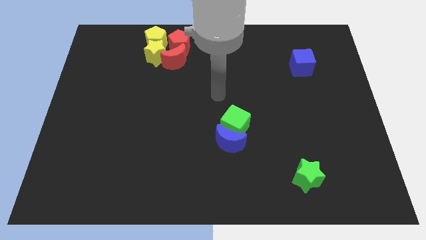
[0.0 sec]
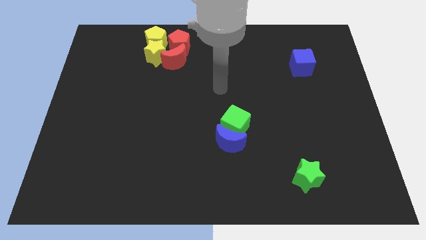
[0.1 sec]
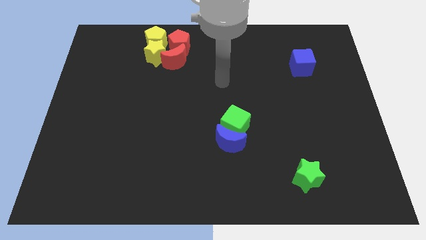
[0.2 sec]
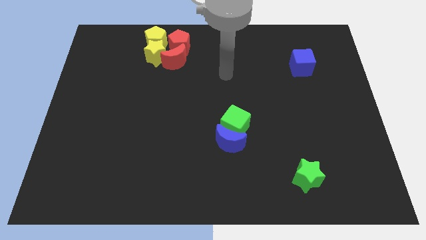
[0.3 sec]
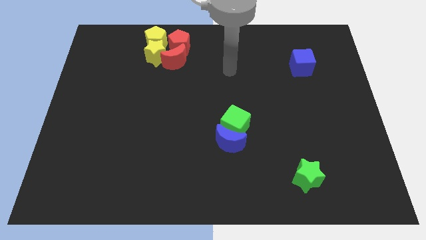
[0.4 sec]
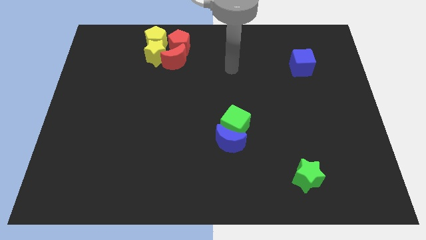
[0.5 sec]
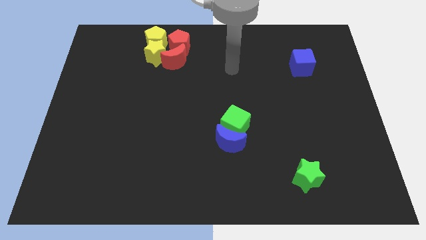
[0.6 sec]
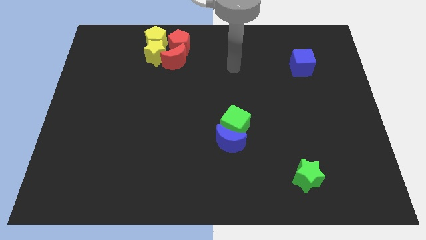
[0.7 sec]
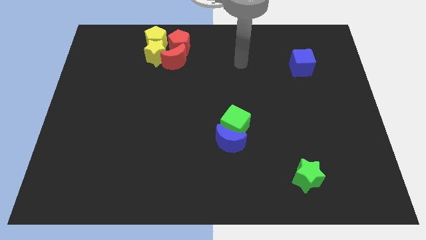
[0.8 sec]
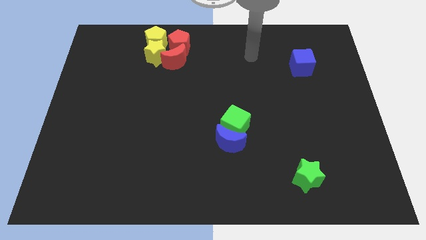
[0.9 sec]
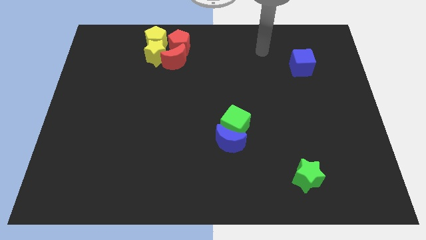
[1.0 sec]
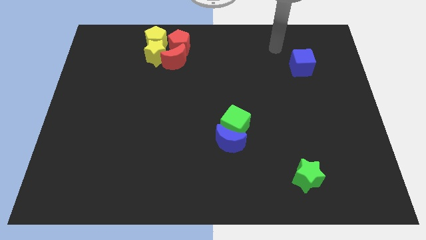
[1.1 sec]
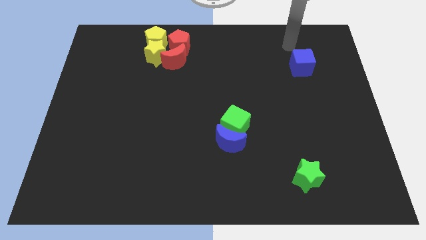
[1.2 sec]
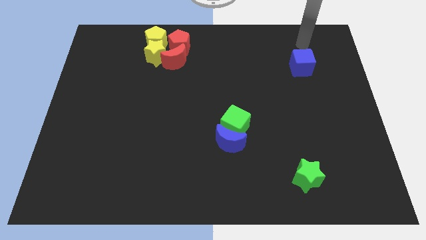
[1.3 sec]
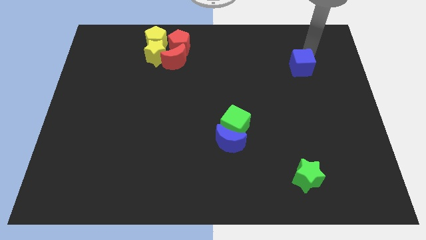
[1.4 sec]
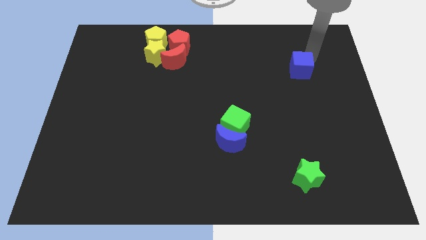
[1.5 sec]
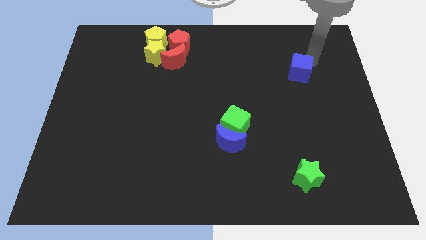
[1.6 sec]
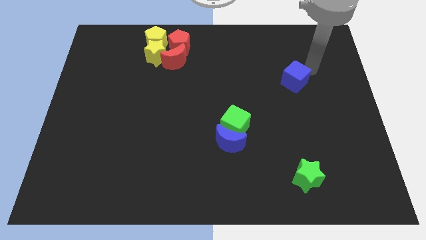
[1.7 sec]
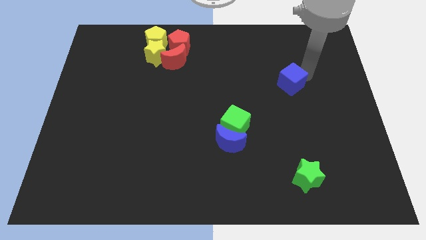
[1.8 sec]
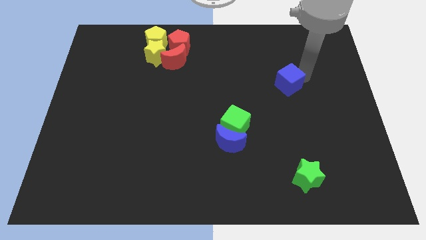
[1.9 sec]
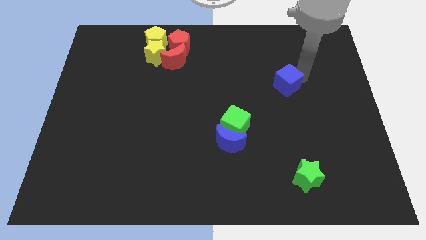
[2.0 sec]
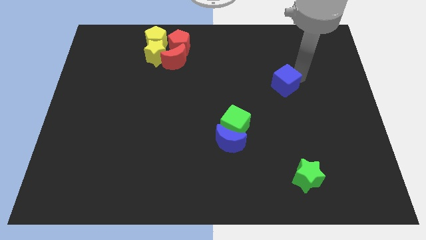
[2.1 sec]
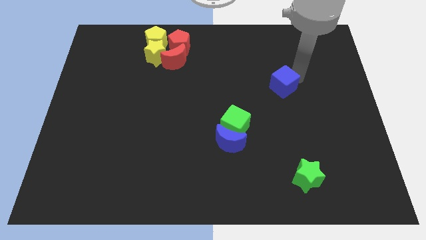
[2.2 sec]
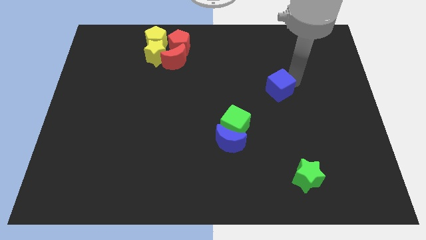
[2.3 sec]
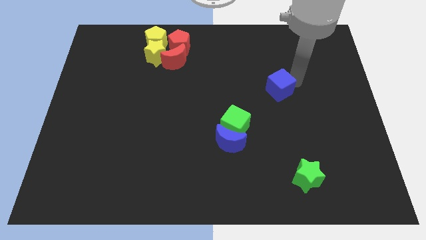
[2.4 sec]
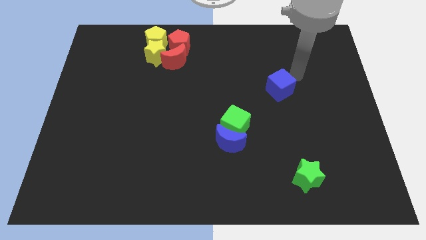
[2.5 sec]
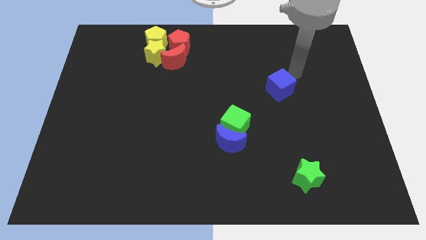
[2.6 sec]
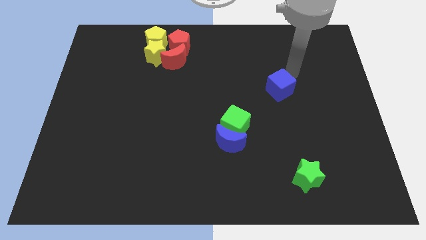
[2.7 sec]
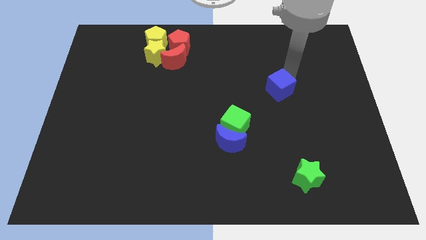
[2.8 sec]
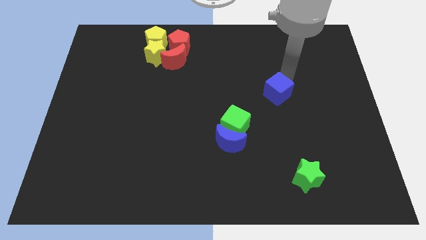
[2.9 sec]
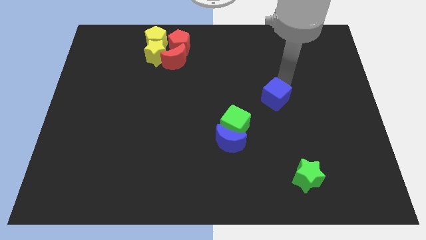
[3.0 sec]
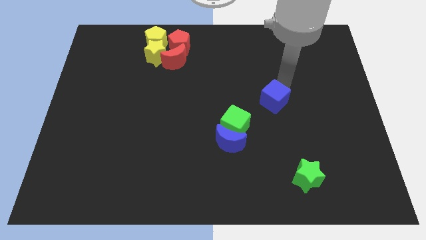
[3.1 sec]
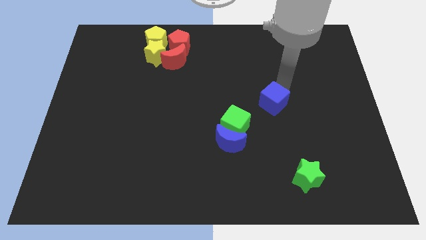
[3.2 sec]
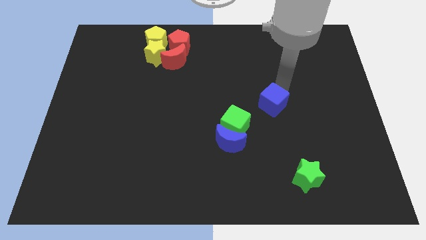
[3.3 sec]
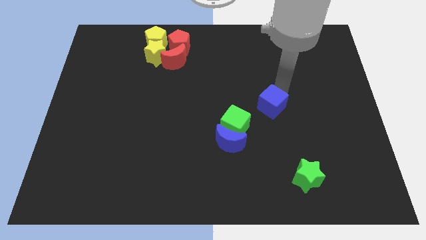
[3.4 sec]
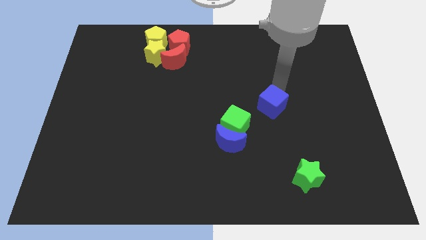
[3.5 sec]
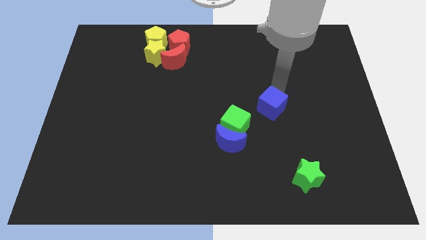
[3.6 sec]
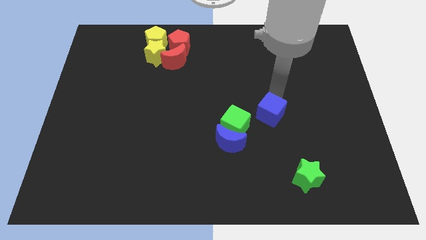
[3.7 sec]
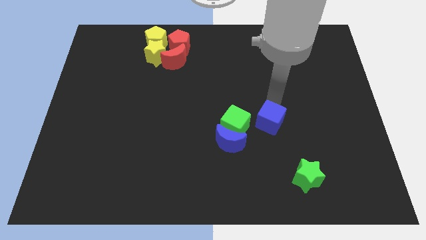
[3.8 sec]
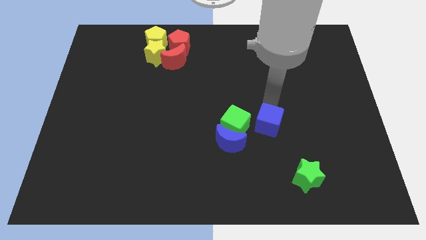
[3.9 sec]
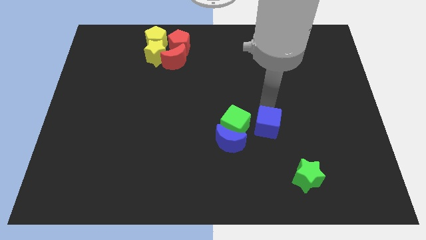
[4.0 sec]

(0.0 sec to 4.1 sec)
move the blue cube to the right of the green cube

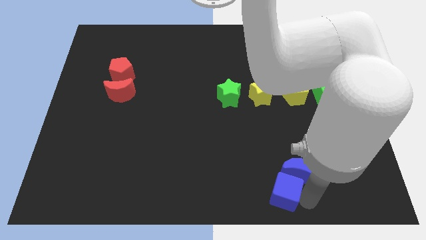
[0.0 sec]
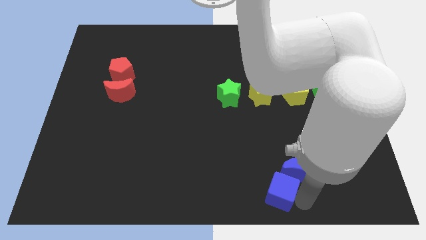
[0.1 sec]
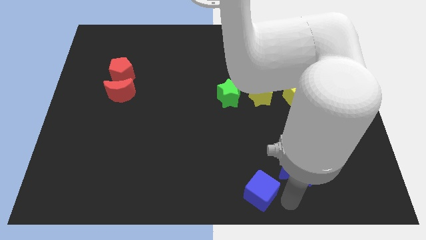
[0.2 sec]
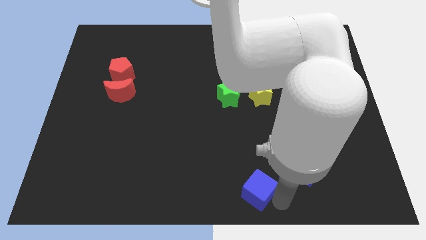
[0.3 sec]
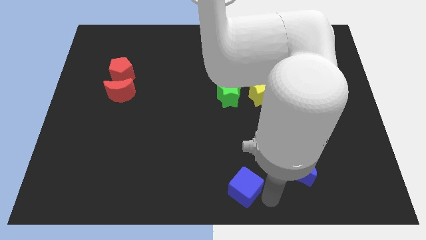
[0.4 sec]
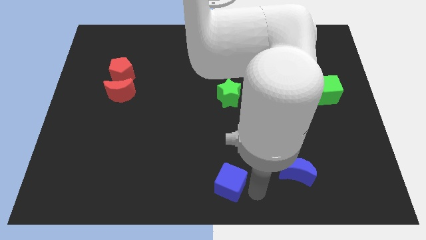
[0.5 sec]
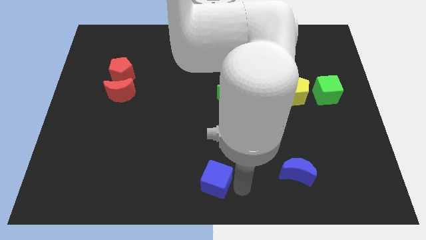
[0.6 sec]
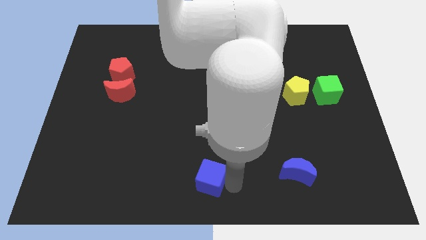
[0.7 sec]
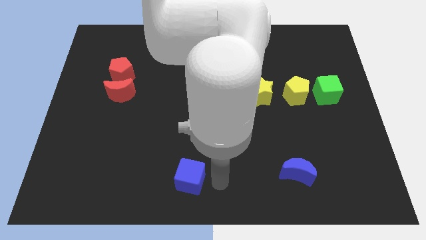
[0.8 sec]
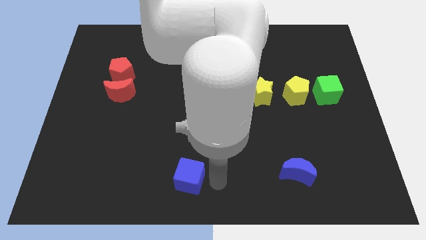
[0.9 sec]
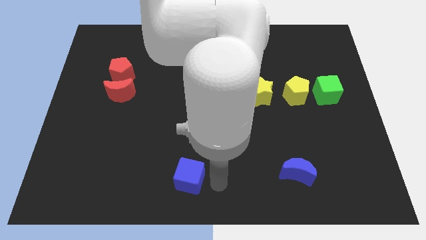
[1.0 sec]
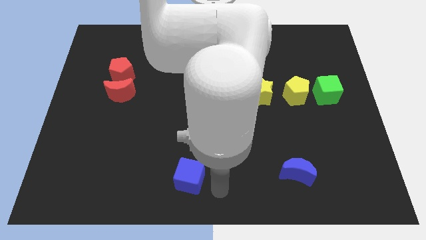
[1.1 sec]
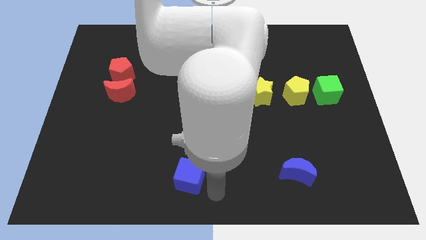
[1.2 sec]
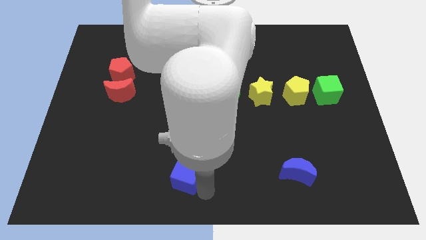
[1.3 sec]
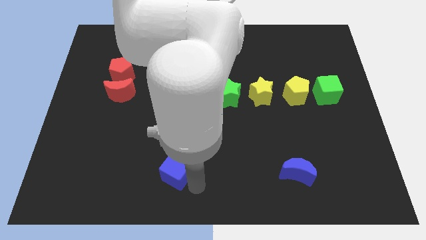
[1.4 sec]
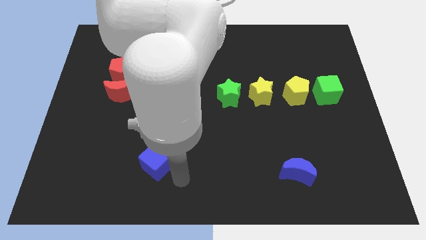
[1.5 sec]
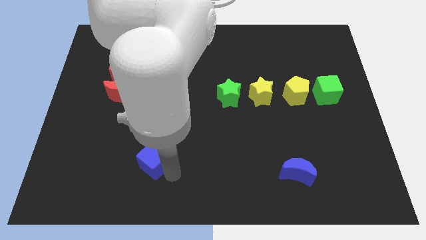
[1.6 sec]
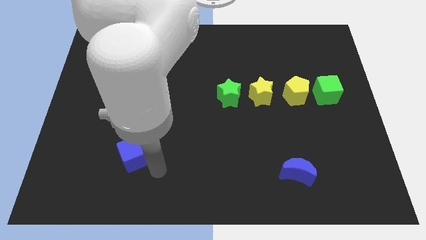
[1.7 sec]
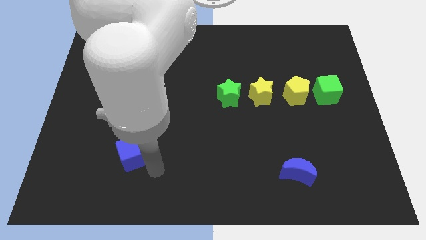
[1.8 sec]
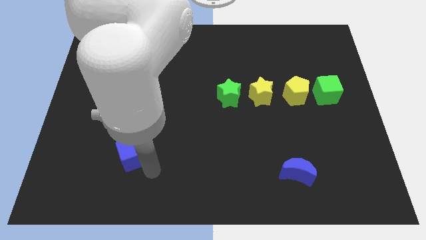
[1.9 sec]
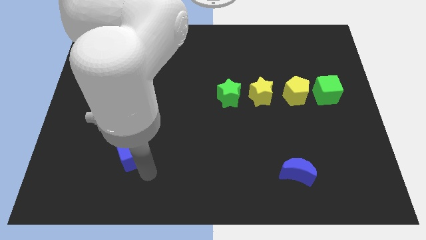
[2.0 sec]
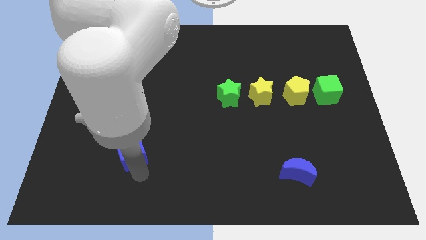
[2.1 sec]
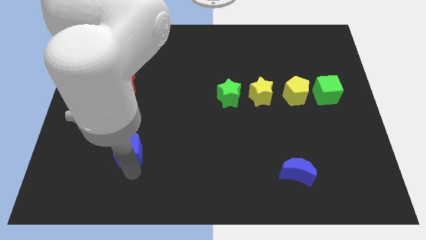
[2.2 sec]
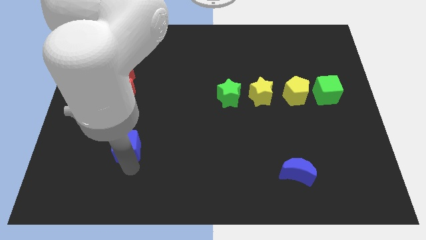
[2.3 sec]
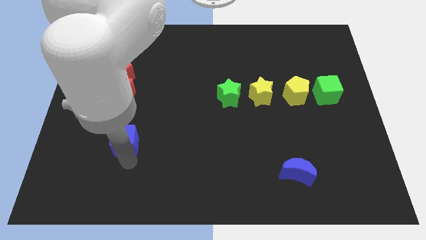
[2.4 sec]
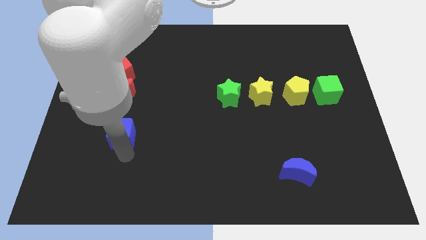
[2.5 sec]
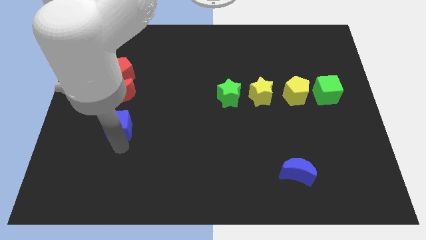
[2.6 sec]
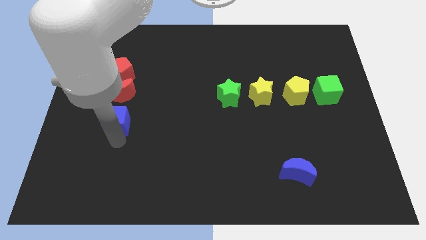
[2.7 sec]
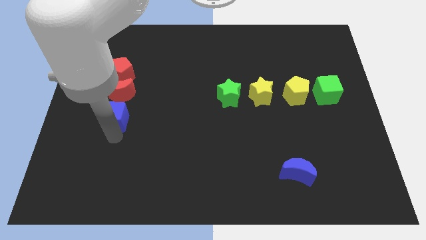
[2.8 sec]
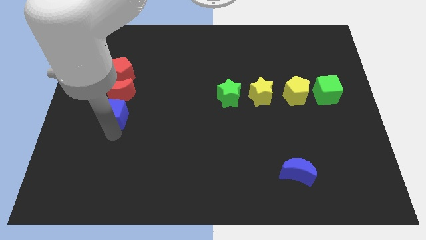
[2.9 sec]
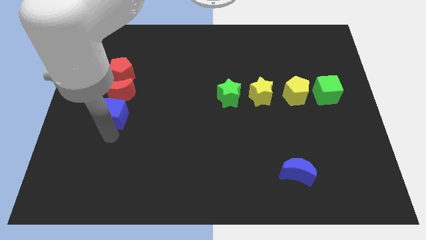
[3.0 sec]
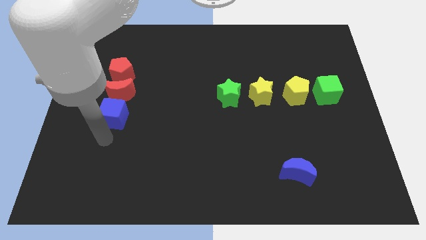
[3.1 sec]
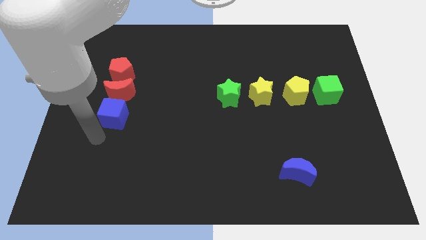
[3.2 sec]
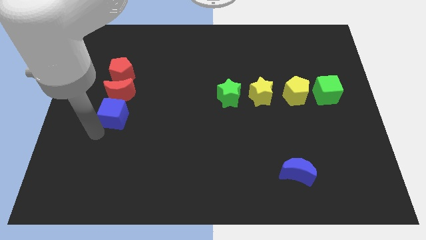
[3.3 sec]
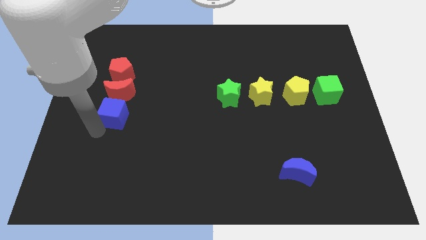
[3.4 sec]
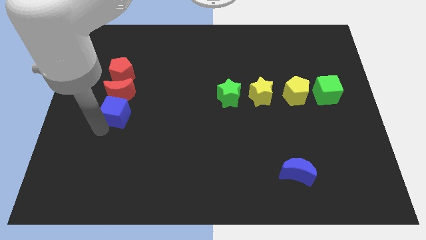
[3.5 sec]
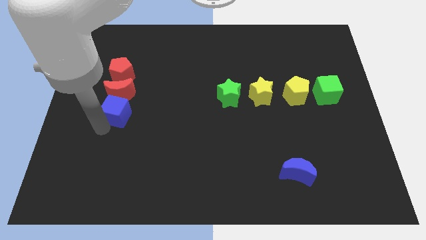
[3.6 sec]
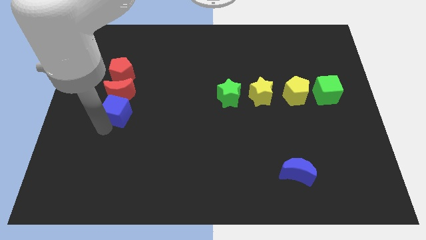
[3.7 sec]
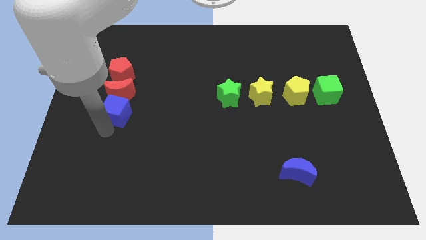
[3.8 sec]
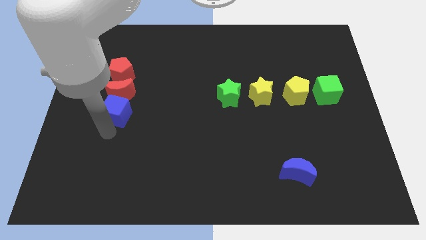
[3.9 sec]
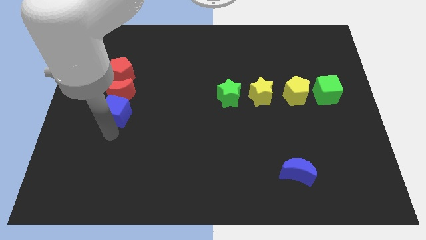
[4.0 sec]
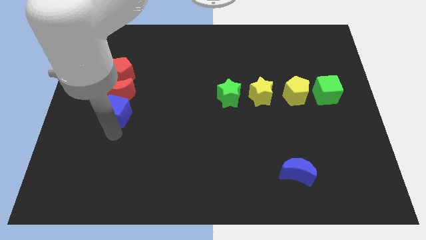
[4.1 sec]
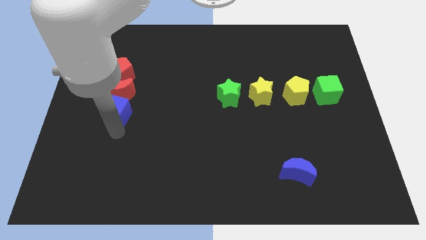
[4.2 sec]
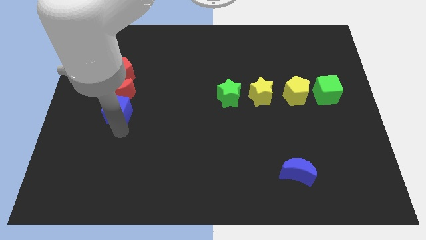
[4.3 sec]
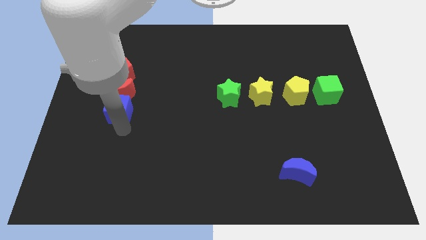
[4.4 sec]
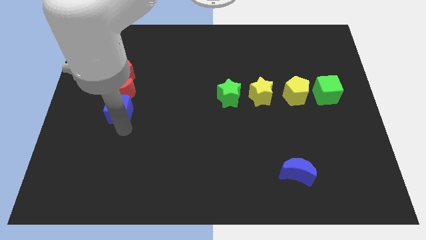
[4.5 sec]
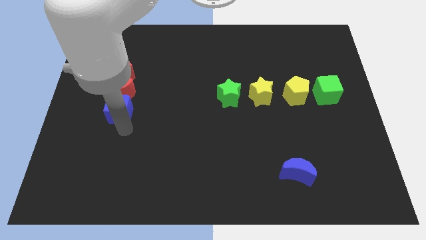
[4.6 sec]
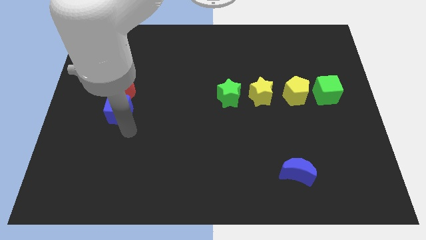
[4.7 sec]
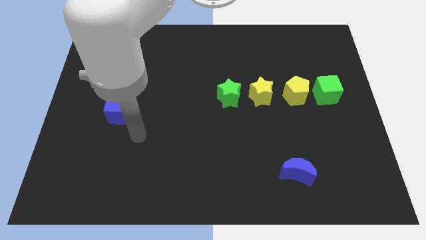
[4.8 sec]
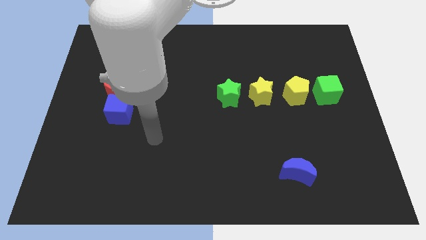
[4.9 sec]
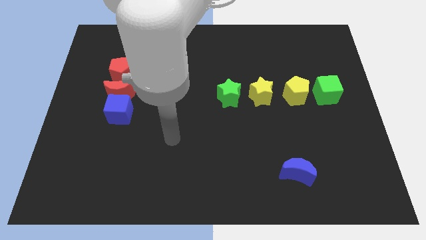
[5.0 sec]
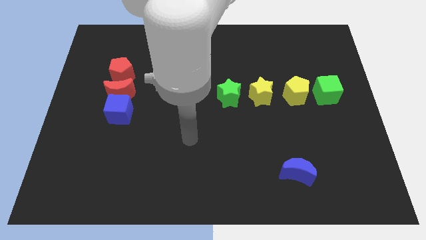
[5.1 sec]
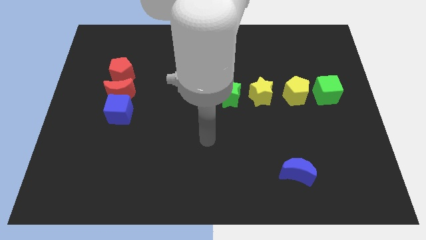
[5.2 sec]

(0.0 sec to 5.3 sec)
place the blue cube below the red moon
